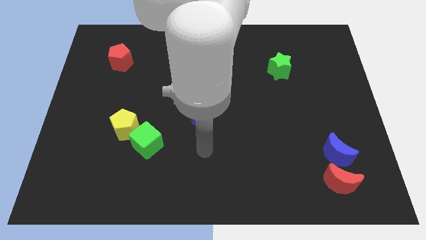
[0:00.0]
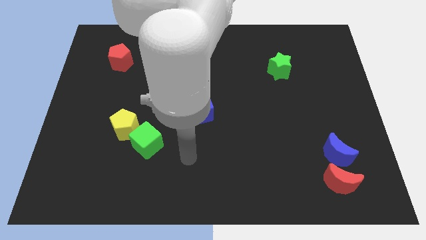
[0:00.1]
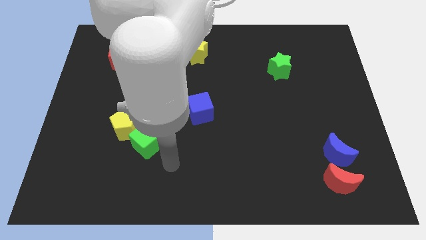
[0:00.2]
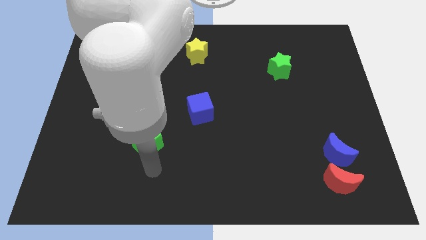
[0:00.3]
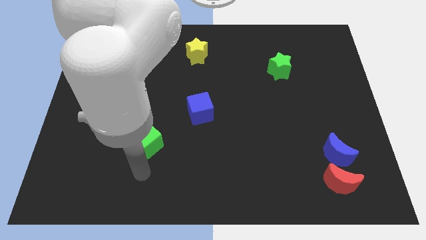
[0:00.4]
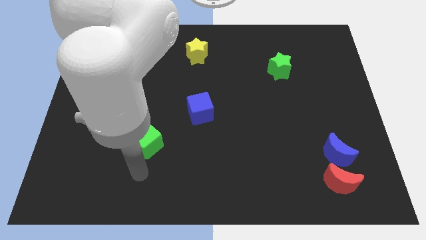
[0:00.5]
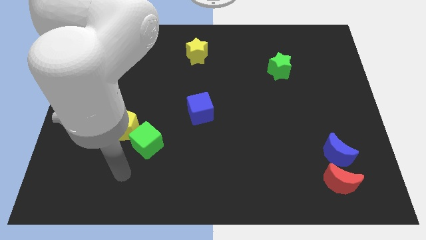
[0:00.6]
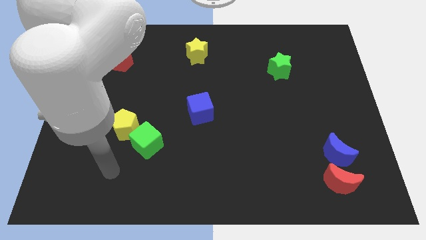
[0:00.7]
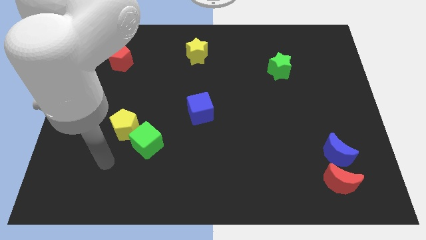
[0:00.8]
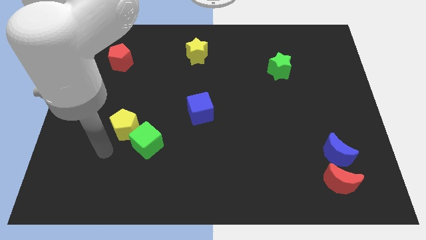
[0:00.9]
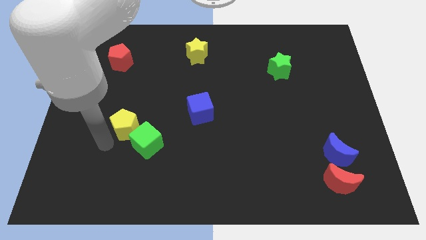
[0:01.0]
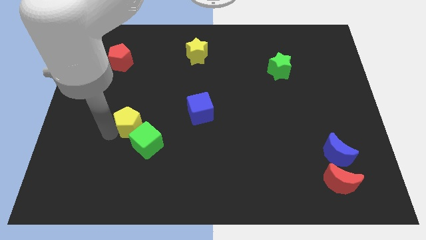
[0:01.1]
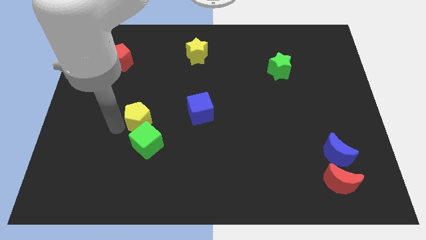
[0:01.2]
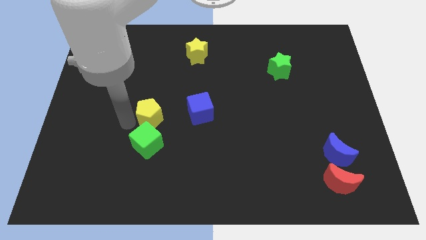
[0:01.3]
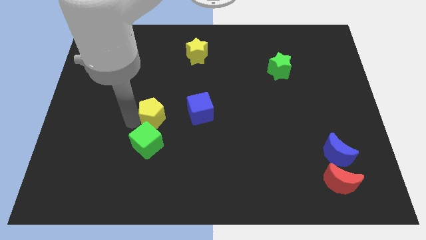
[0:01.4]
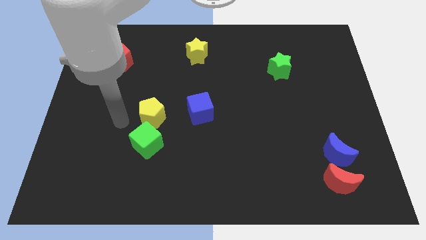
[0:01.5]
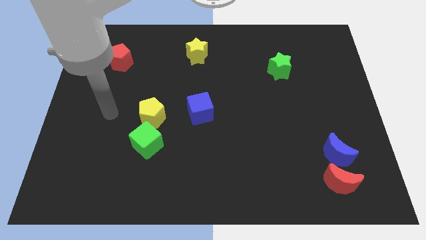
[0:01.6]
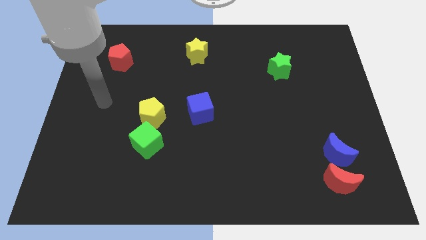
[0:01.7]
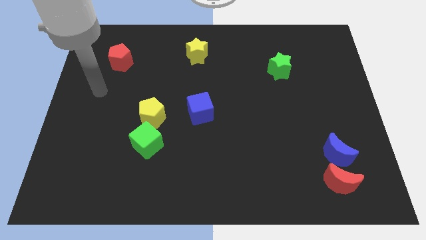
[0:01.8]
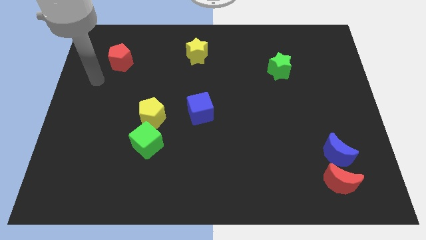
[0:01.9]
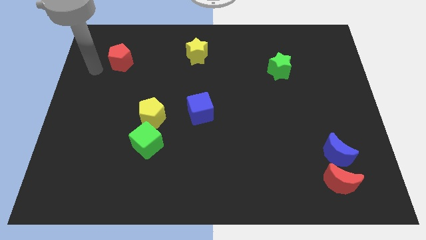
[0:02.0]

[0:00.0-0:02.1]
slightly push the yellow pentagon to the right

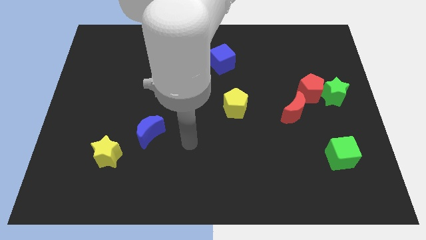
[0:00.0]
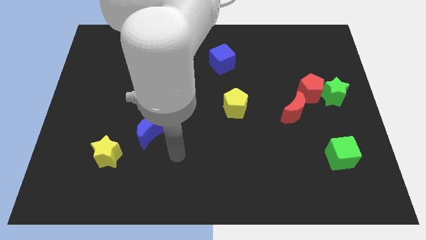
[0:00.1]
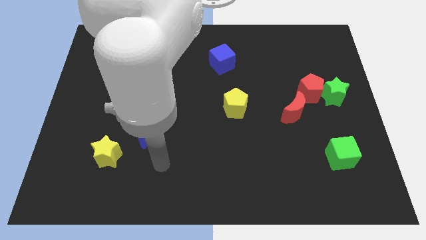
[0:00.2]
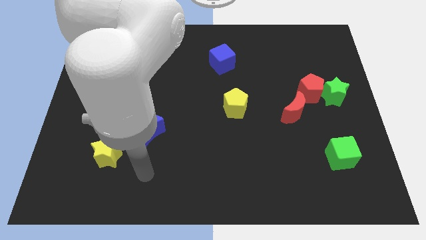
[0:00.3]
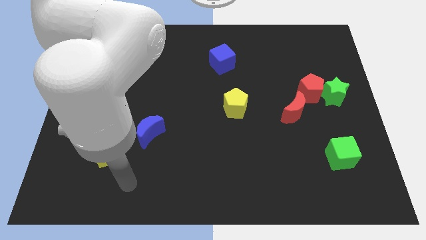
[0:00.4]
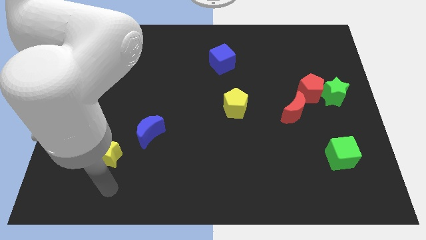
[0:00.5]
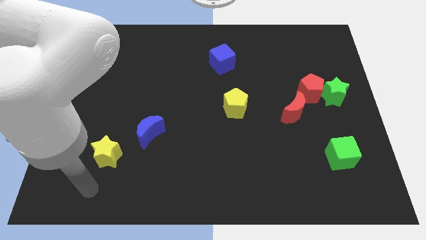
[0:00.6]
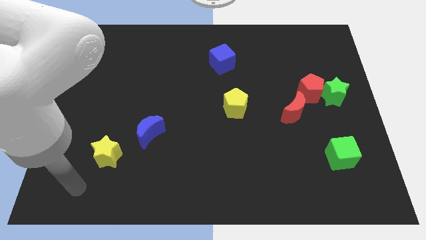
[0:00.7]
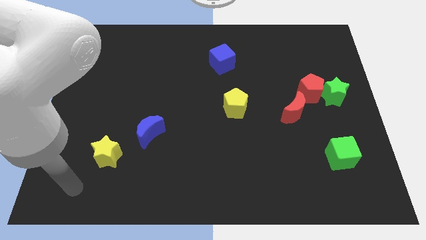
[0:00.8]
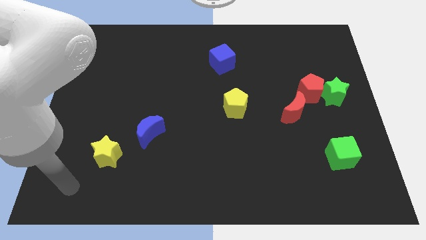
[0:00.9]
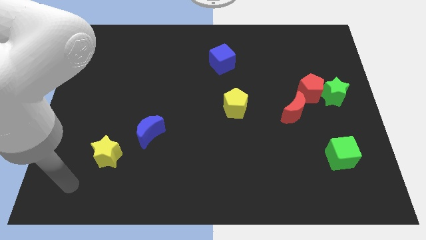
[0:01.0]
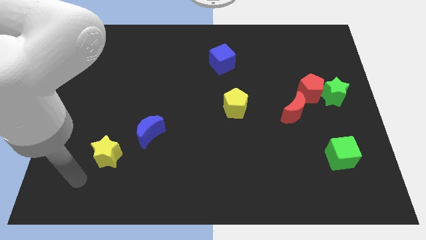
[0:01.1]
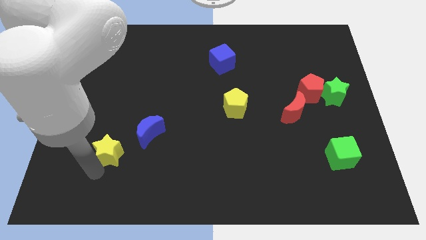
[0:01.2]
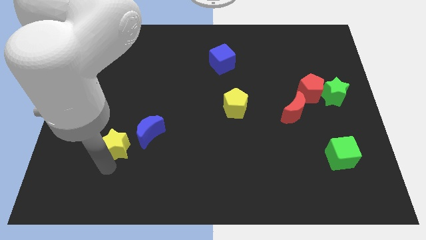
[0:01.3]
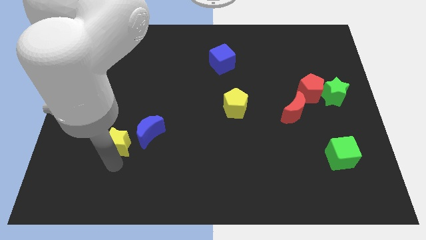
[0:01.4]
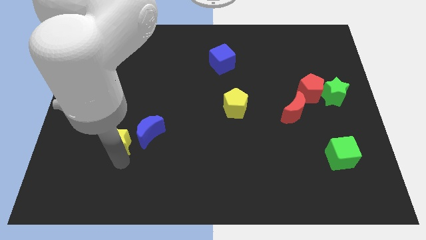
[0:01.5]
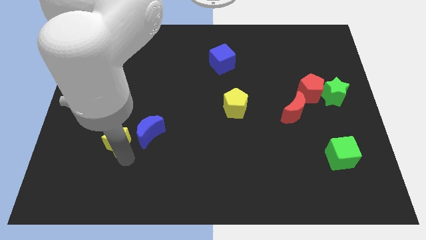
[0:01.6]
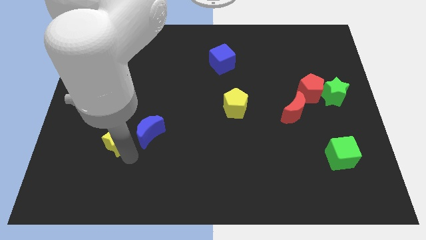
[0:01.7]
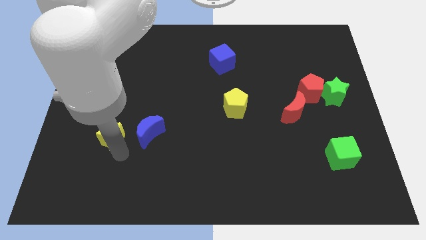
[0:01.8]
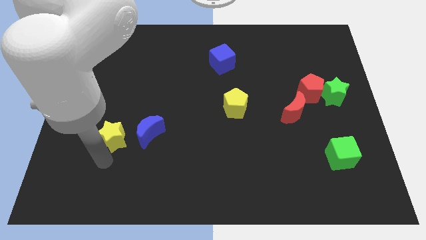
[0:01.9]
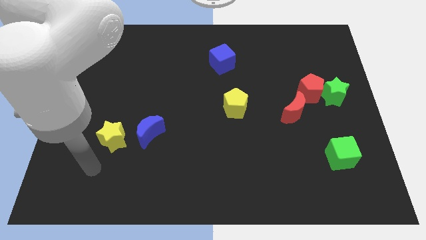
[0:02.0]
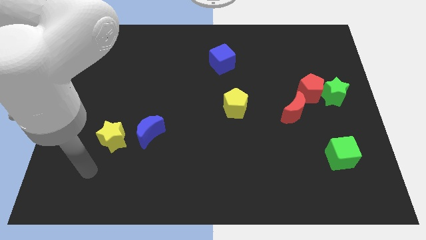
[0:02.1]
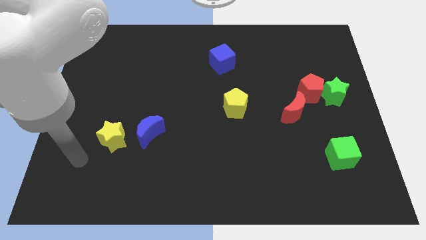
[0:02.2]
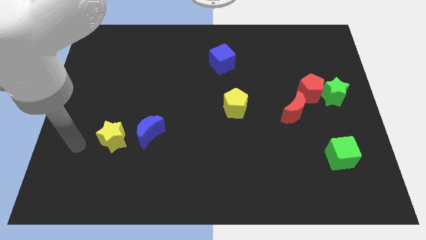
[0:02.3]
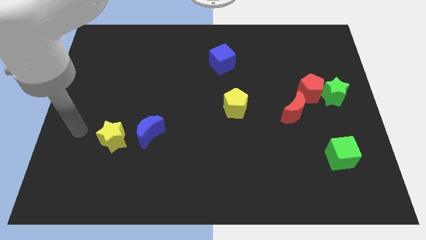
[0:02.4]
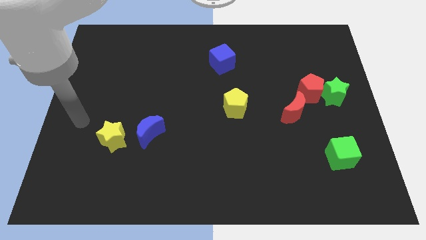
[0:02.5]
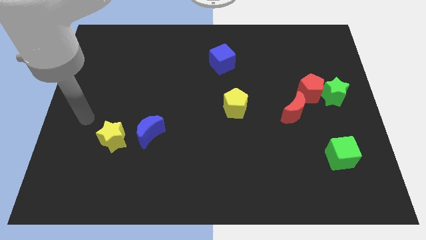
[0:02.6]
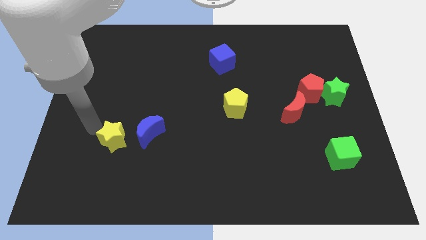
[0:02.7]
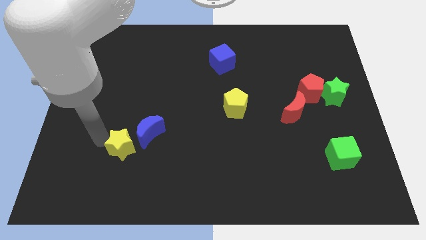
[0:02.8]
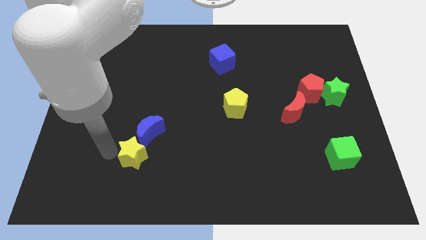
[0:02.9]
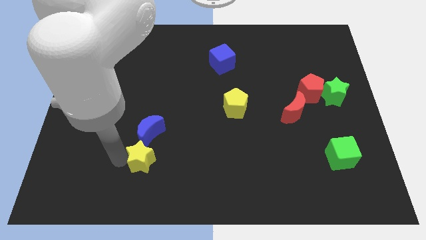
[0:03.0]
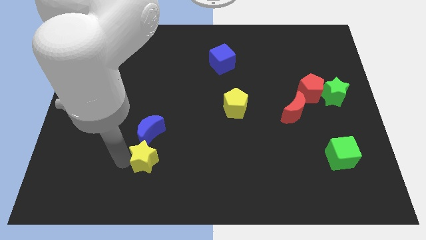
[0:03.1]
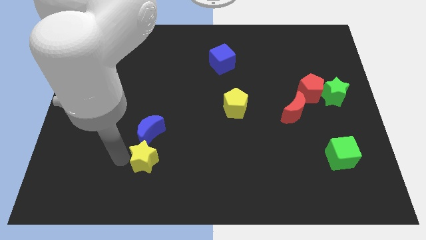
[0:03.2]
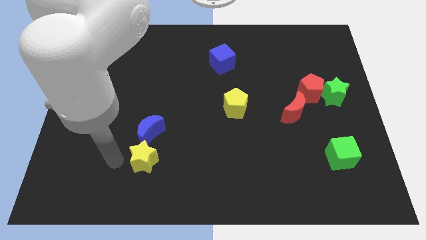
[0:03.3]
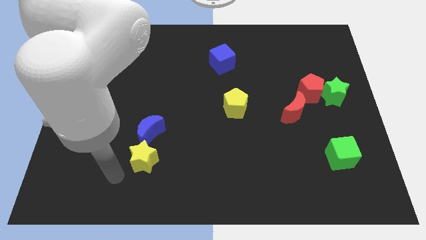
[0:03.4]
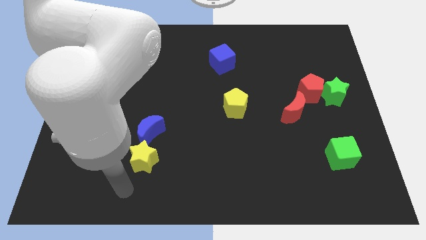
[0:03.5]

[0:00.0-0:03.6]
place the yellow star below the blue crescent

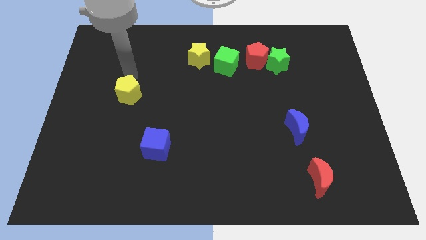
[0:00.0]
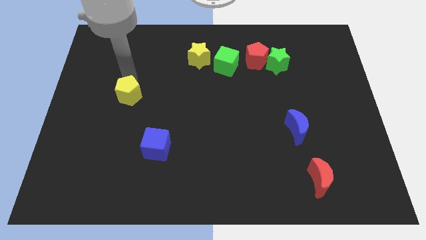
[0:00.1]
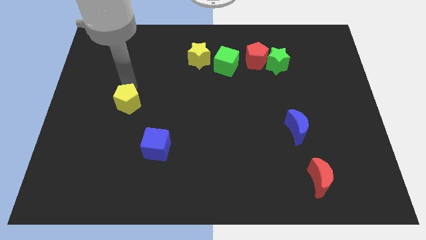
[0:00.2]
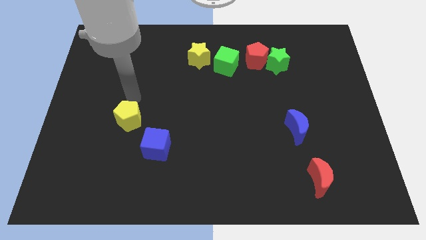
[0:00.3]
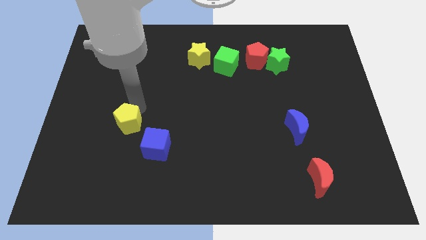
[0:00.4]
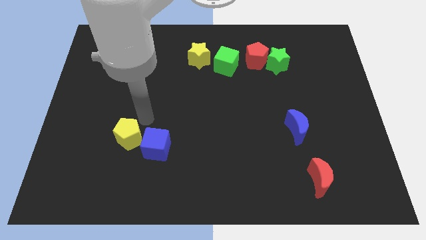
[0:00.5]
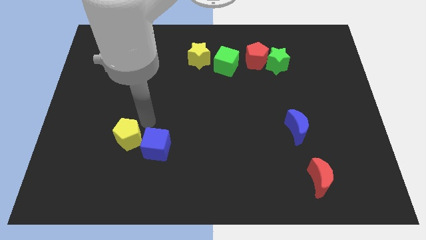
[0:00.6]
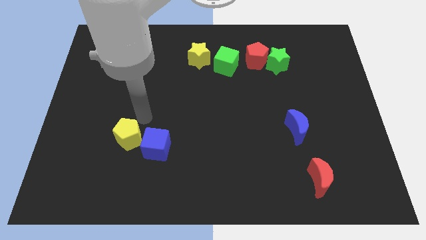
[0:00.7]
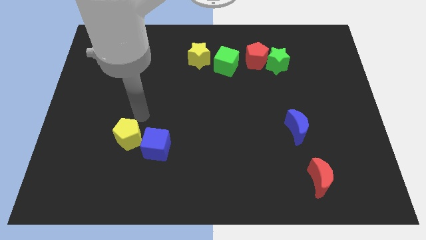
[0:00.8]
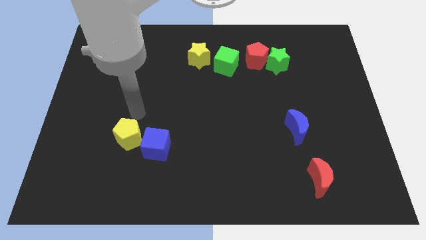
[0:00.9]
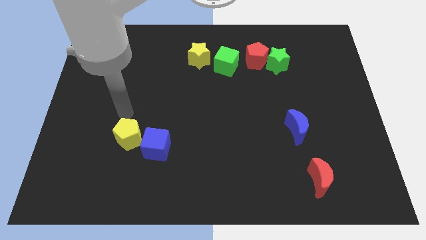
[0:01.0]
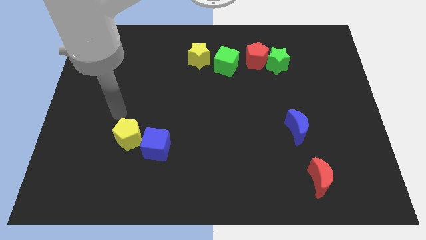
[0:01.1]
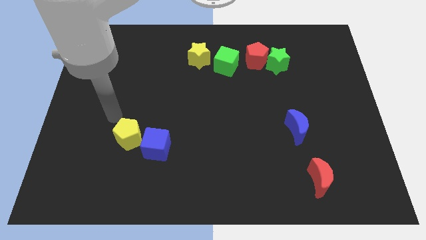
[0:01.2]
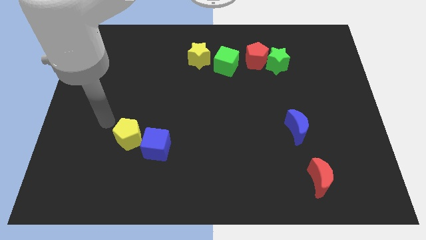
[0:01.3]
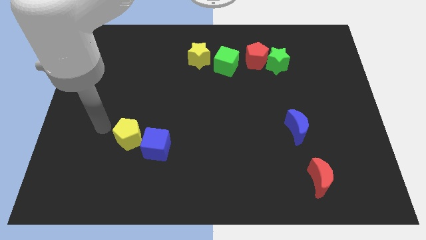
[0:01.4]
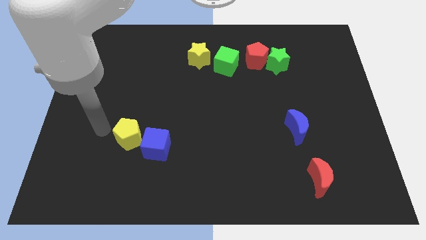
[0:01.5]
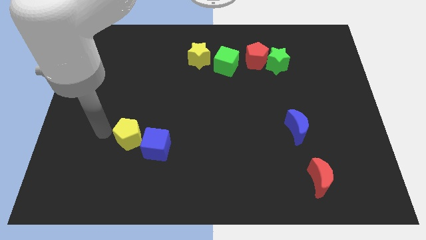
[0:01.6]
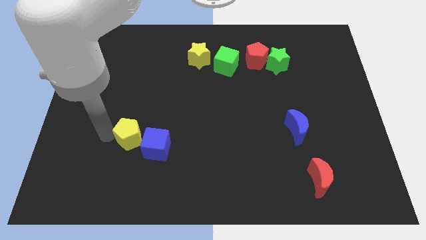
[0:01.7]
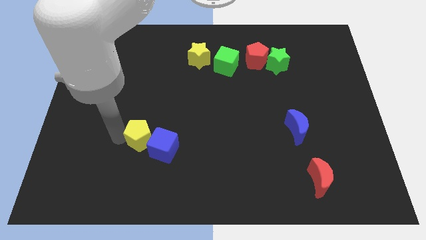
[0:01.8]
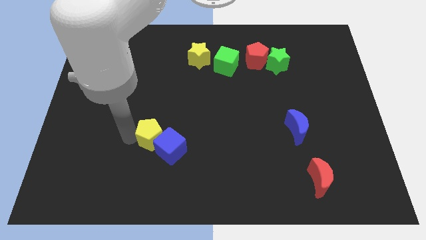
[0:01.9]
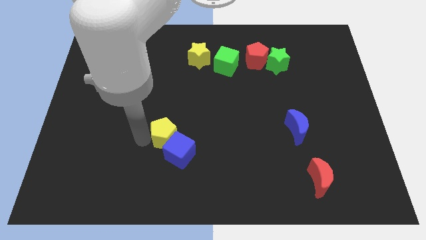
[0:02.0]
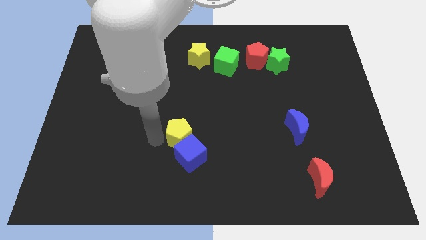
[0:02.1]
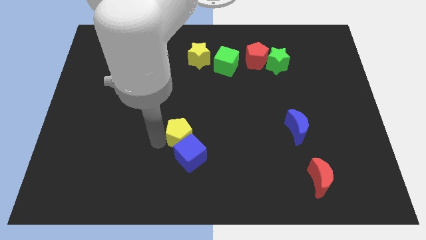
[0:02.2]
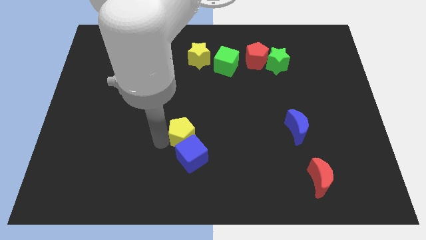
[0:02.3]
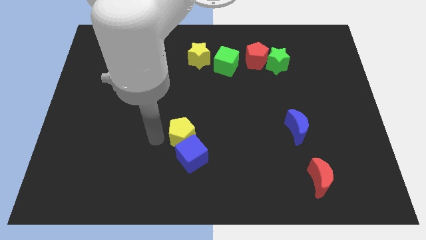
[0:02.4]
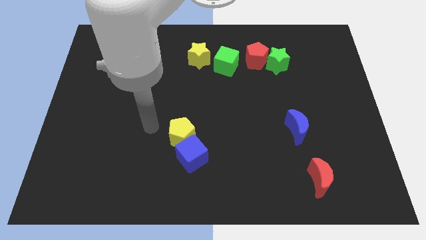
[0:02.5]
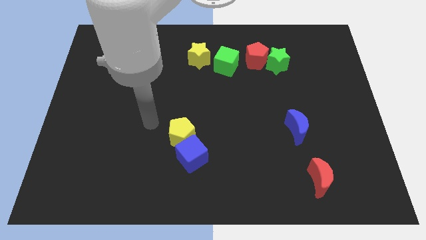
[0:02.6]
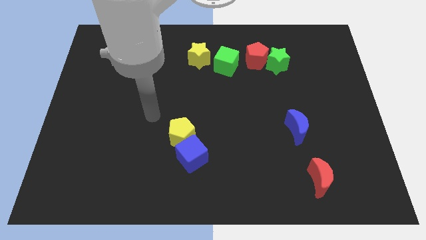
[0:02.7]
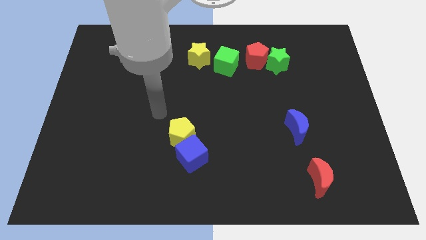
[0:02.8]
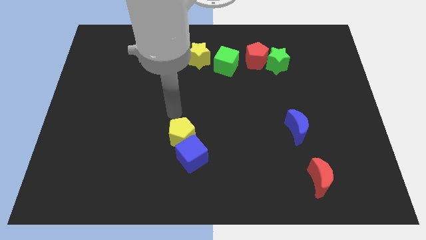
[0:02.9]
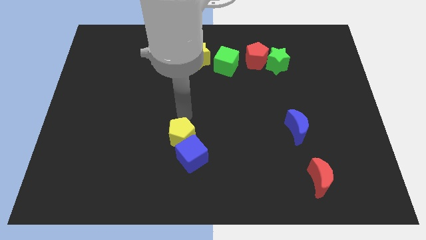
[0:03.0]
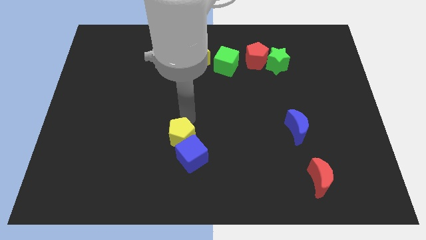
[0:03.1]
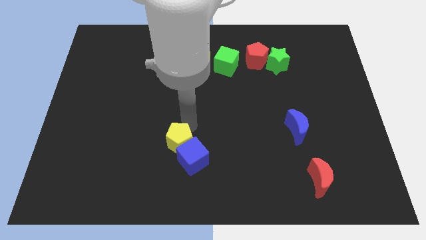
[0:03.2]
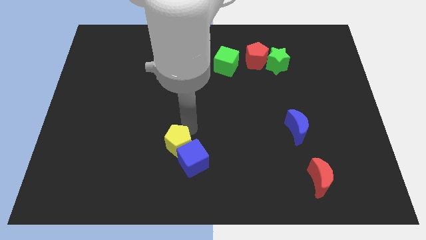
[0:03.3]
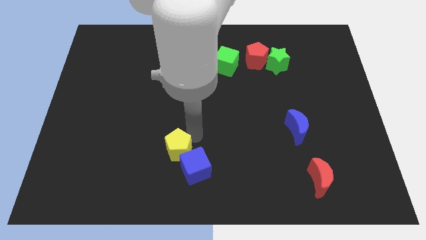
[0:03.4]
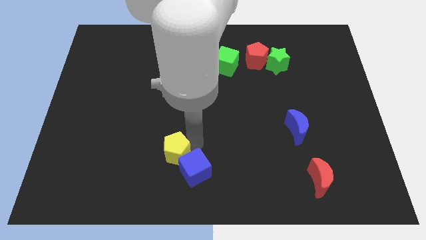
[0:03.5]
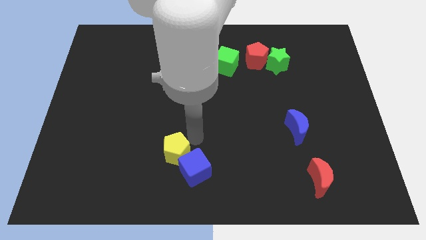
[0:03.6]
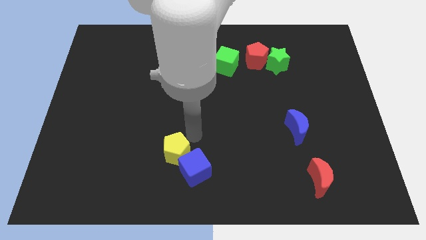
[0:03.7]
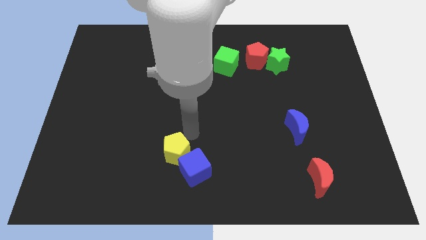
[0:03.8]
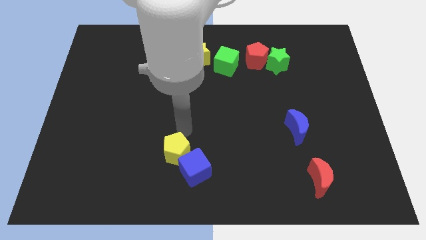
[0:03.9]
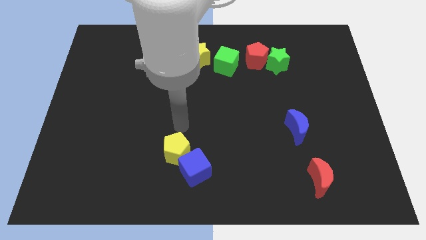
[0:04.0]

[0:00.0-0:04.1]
drag the yellow pentagon into the blue cube
